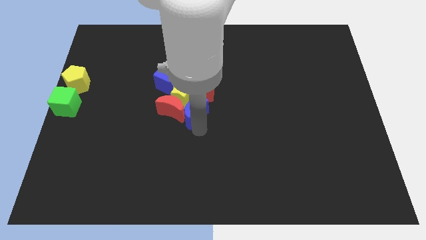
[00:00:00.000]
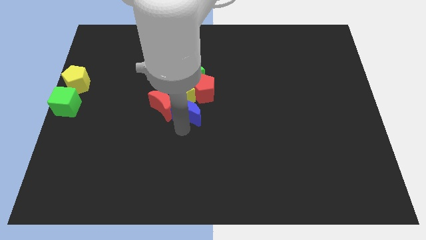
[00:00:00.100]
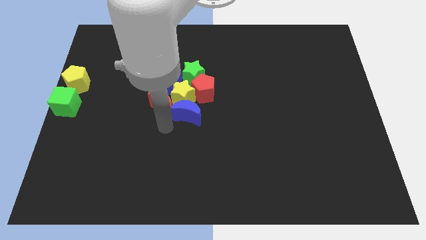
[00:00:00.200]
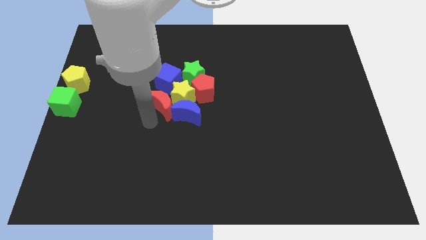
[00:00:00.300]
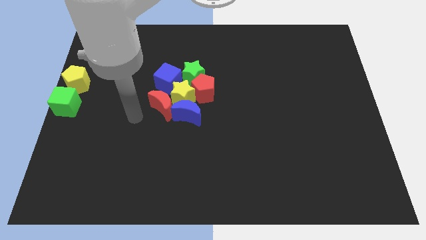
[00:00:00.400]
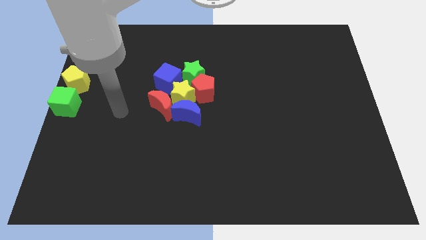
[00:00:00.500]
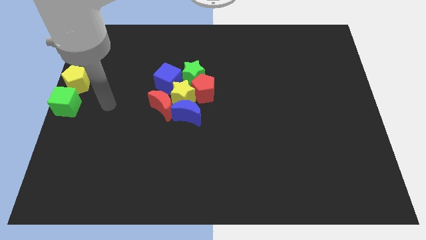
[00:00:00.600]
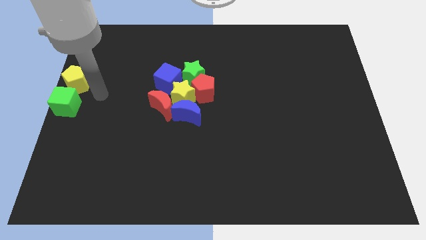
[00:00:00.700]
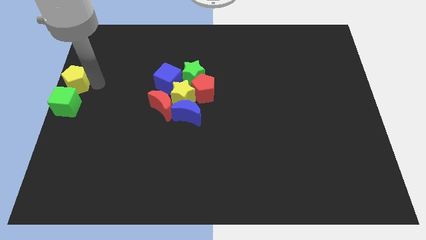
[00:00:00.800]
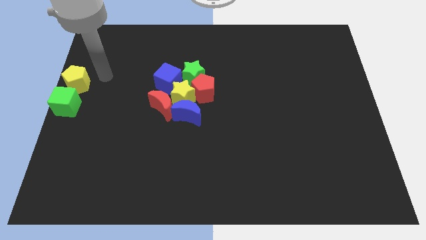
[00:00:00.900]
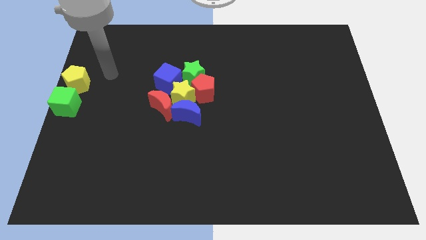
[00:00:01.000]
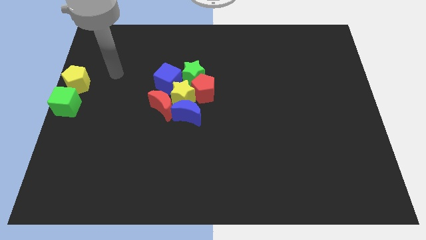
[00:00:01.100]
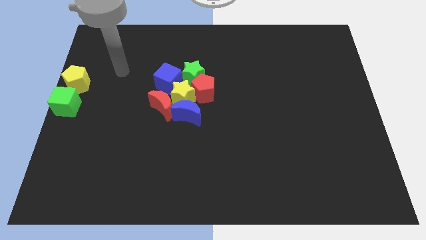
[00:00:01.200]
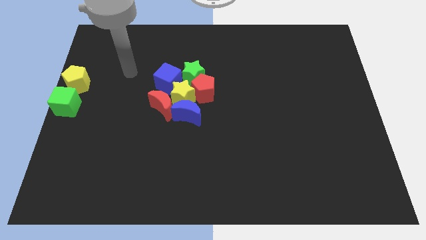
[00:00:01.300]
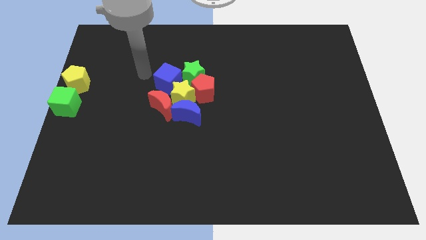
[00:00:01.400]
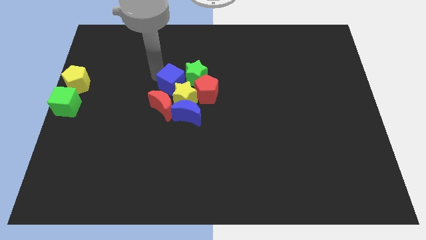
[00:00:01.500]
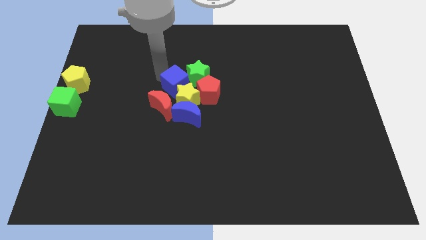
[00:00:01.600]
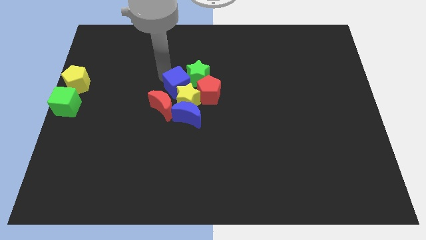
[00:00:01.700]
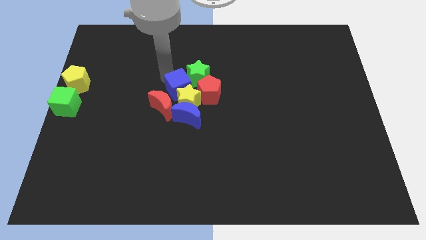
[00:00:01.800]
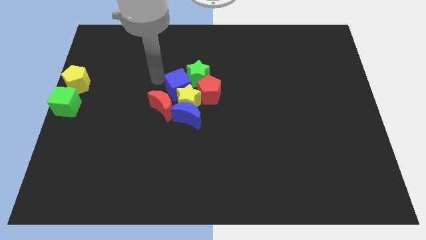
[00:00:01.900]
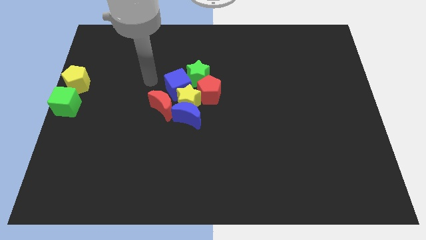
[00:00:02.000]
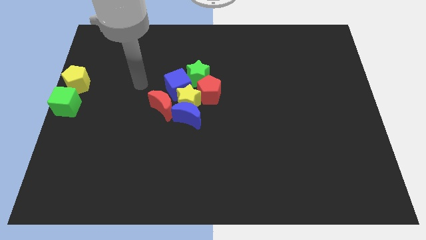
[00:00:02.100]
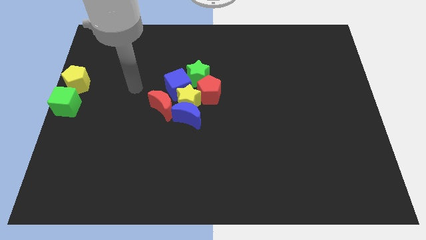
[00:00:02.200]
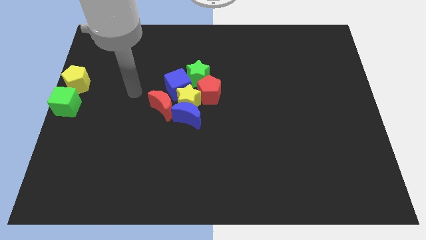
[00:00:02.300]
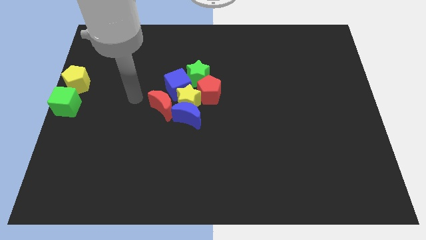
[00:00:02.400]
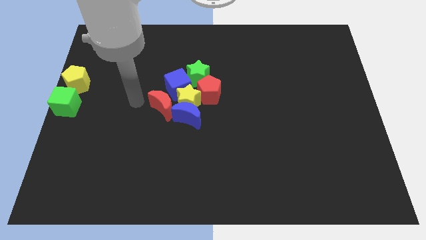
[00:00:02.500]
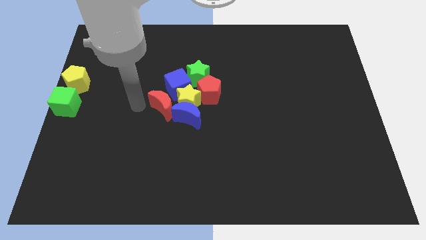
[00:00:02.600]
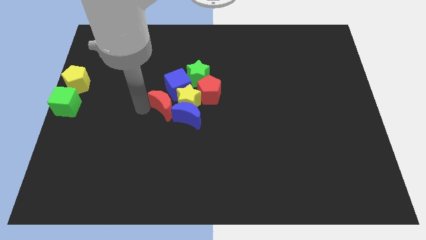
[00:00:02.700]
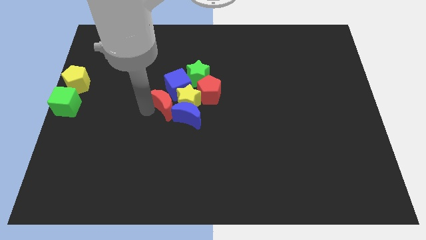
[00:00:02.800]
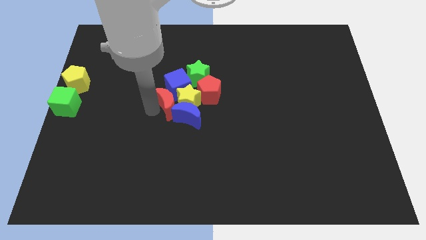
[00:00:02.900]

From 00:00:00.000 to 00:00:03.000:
push the blue cube close to red moon

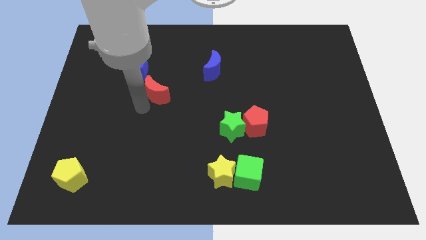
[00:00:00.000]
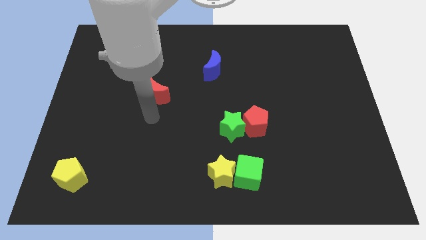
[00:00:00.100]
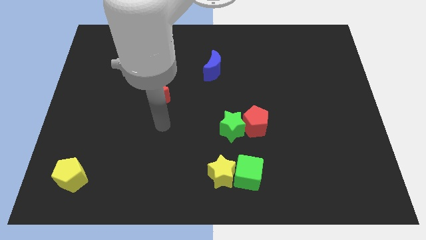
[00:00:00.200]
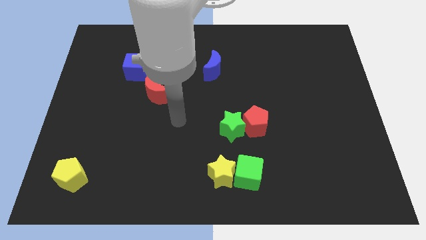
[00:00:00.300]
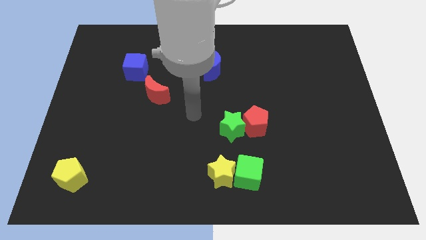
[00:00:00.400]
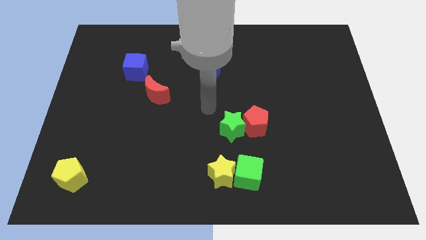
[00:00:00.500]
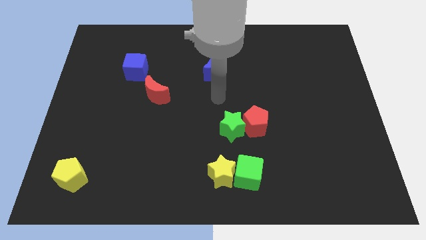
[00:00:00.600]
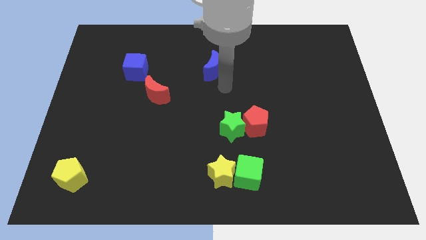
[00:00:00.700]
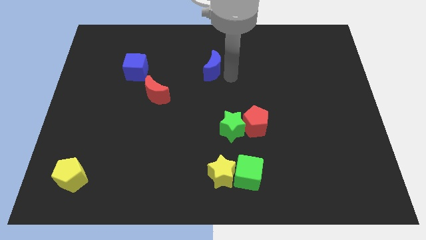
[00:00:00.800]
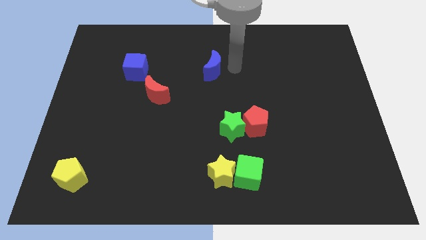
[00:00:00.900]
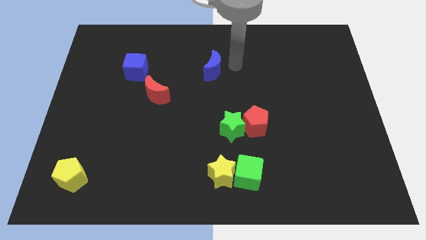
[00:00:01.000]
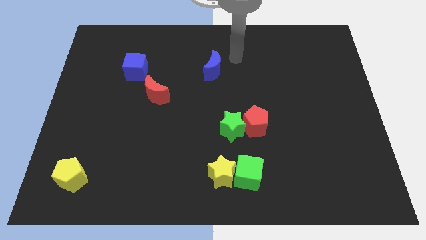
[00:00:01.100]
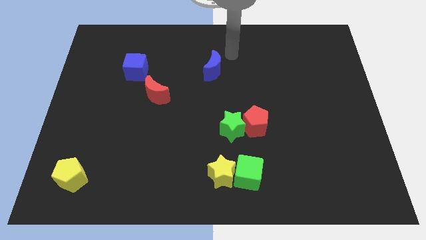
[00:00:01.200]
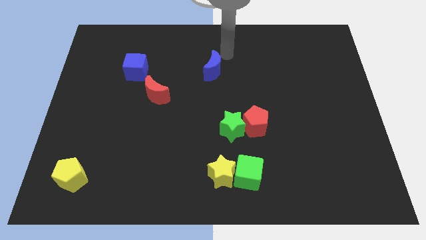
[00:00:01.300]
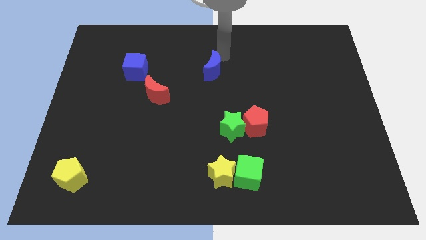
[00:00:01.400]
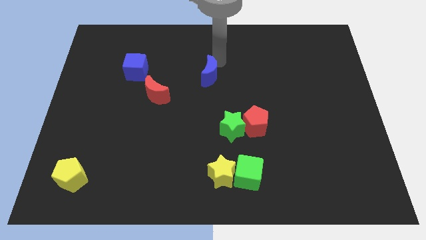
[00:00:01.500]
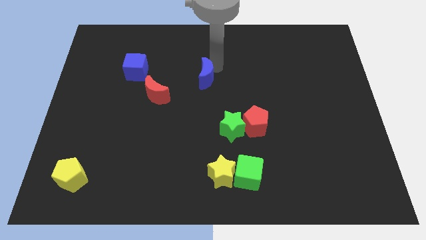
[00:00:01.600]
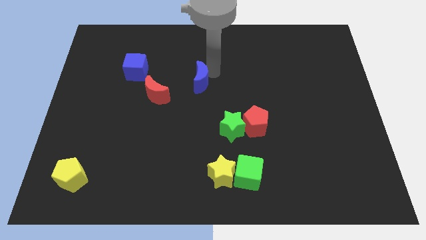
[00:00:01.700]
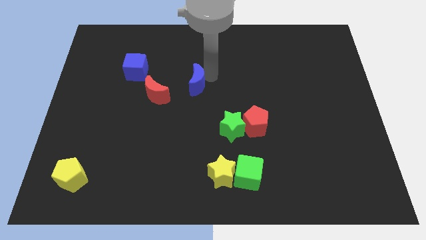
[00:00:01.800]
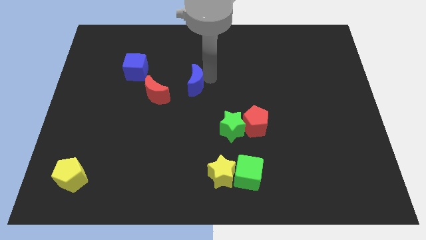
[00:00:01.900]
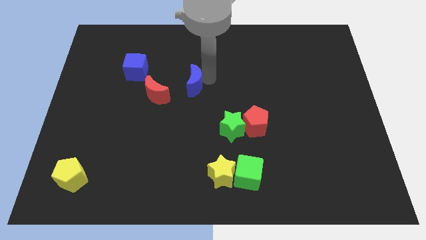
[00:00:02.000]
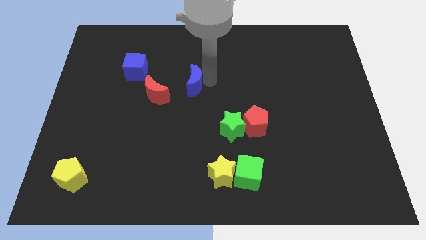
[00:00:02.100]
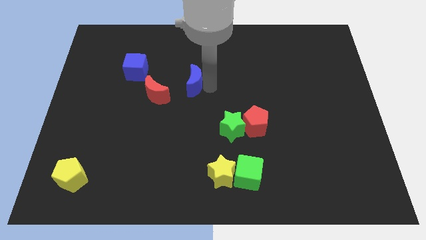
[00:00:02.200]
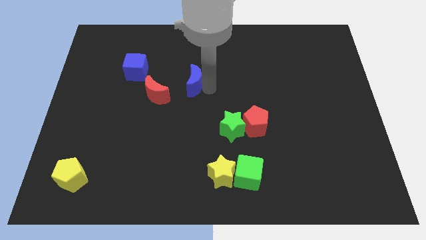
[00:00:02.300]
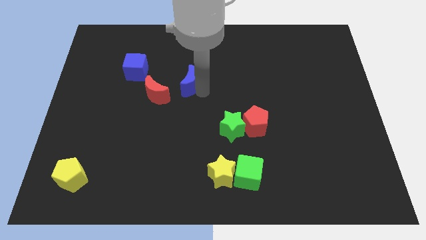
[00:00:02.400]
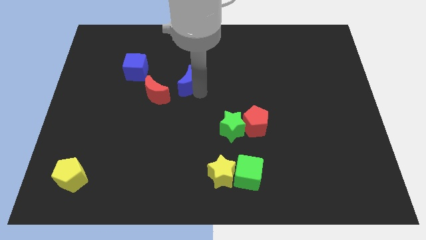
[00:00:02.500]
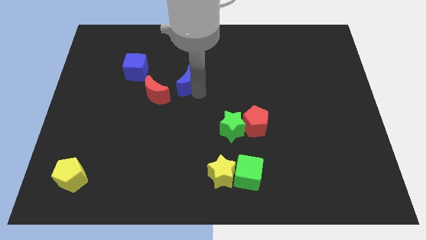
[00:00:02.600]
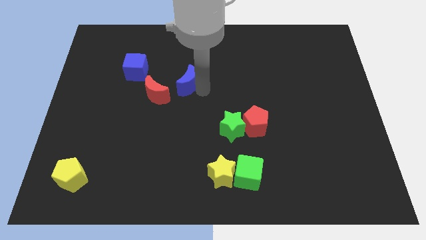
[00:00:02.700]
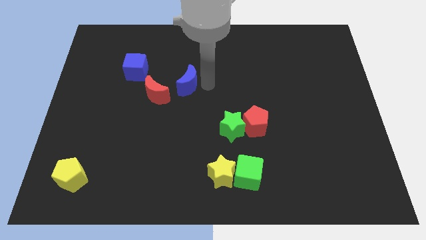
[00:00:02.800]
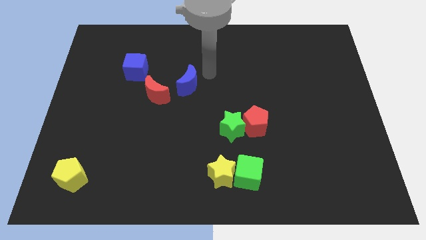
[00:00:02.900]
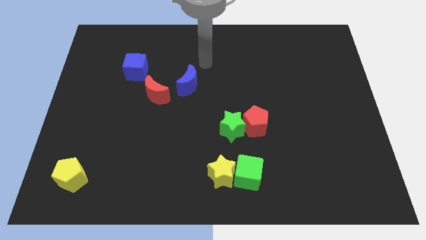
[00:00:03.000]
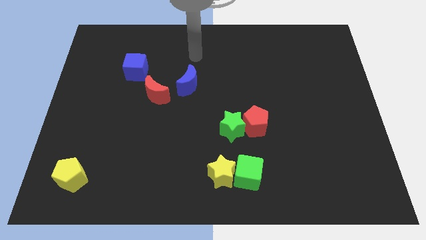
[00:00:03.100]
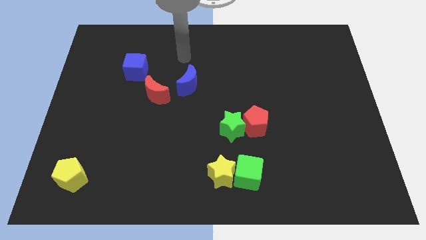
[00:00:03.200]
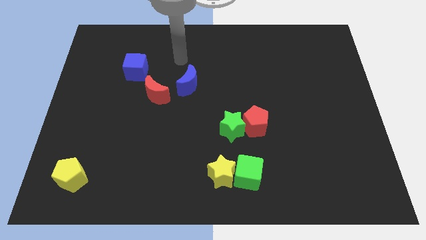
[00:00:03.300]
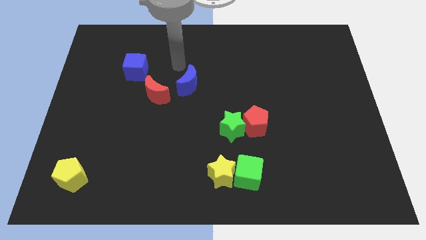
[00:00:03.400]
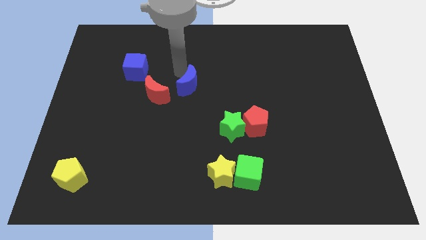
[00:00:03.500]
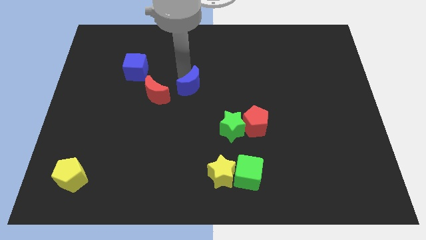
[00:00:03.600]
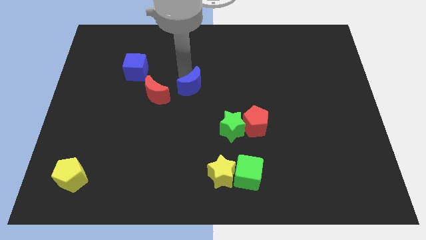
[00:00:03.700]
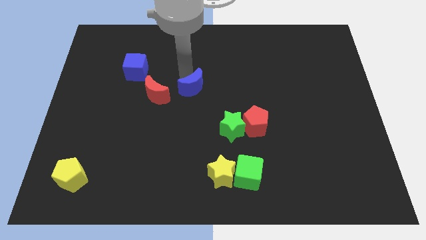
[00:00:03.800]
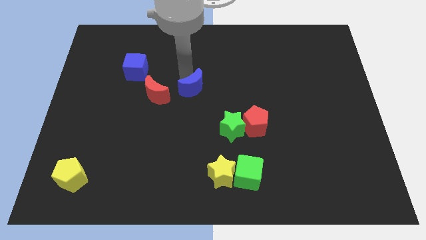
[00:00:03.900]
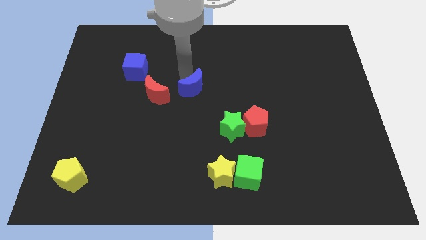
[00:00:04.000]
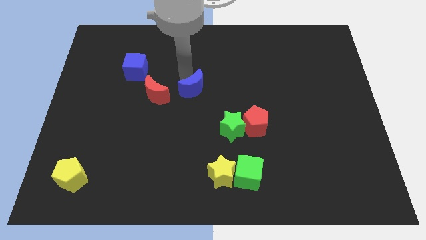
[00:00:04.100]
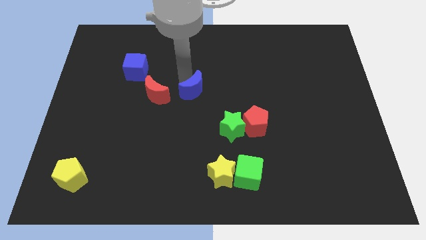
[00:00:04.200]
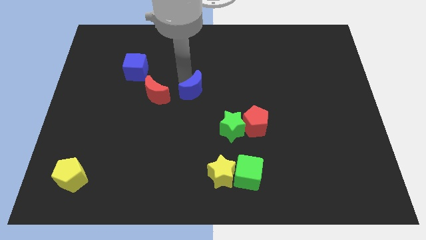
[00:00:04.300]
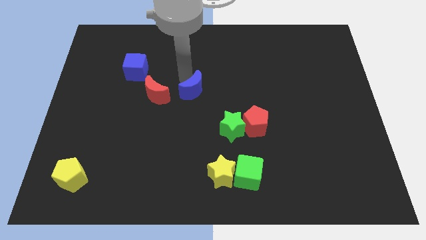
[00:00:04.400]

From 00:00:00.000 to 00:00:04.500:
bring the blue crescent at the right side of the red moon

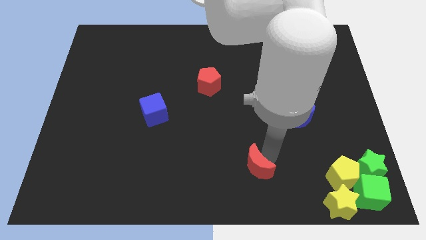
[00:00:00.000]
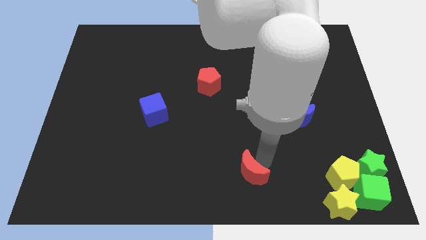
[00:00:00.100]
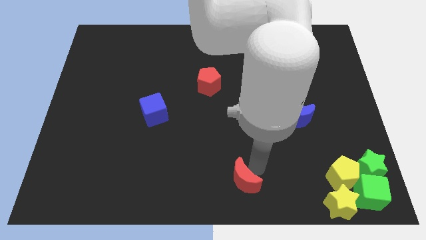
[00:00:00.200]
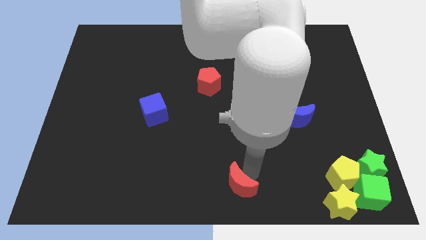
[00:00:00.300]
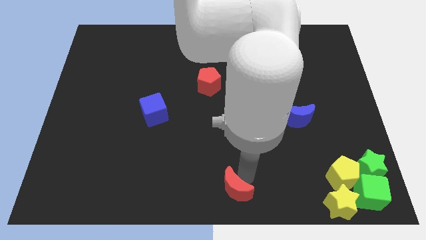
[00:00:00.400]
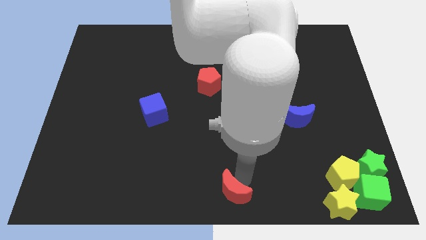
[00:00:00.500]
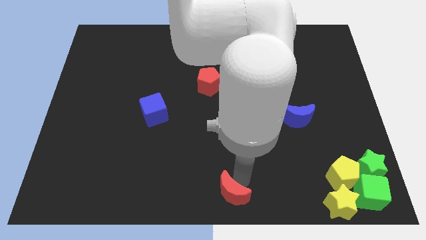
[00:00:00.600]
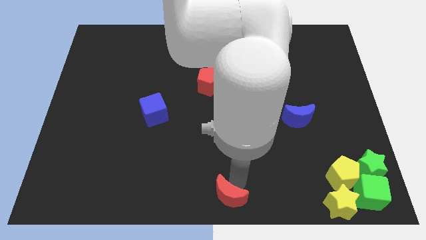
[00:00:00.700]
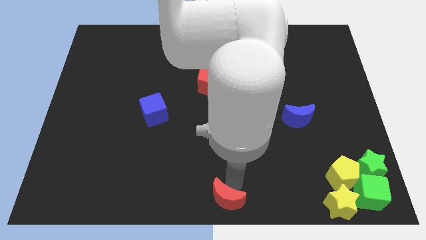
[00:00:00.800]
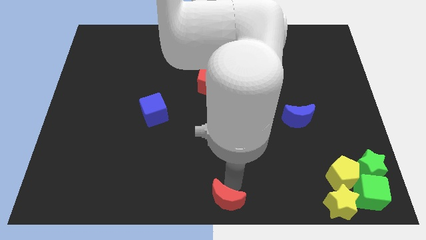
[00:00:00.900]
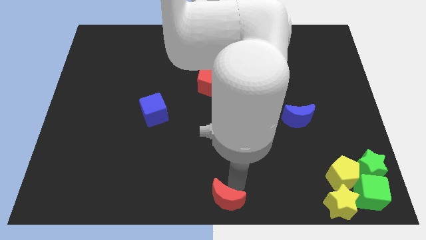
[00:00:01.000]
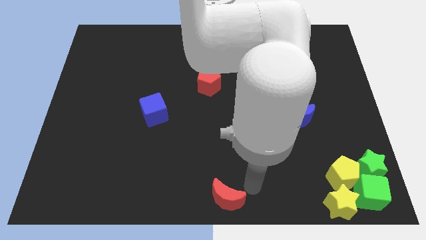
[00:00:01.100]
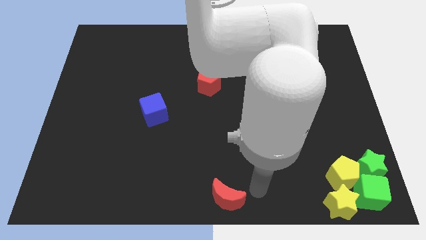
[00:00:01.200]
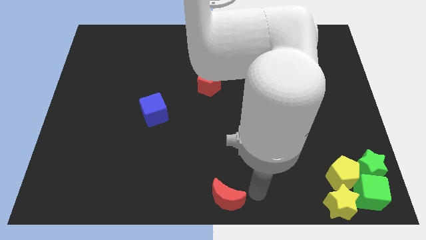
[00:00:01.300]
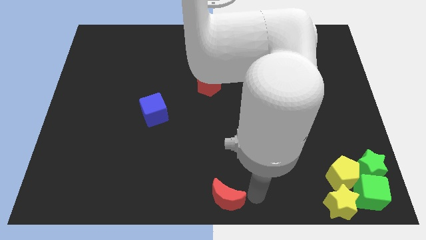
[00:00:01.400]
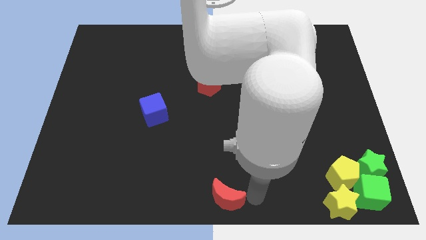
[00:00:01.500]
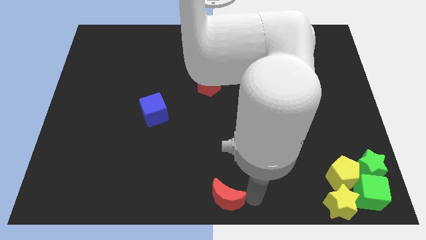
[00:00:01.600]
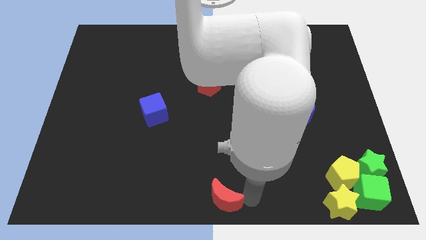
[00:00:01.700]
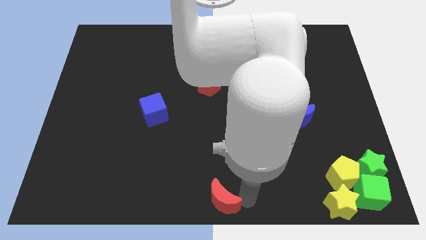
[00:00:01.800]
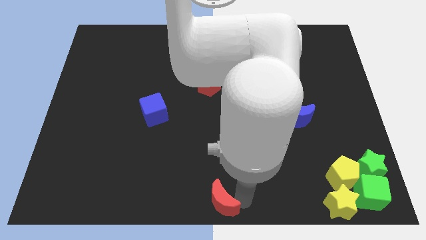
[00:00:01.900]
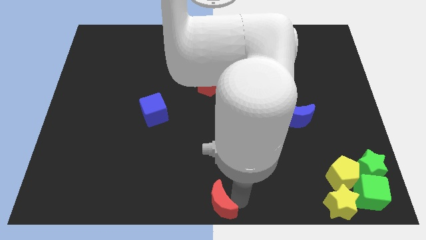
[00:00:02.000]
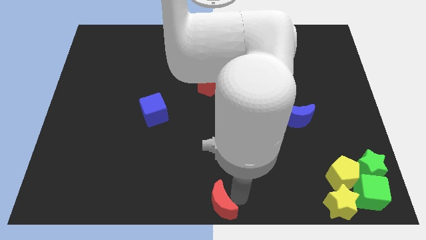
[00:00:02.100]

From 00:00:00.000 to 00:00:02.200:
push the red crescent to the bottom center of the board
